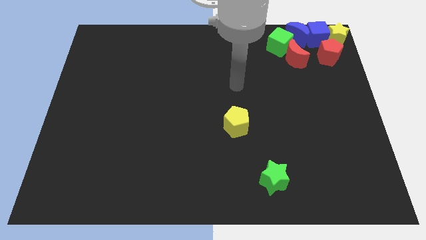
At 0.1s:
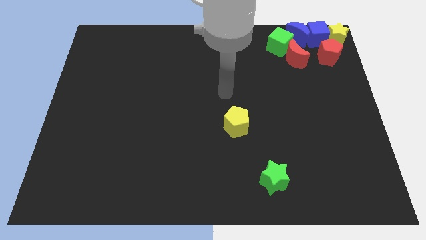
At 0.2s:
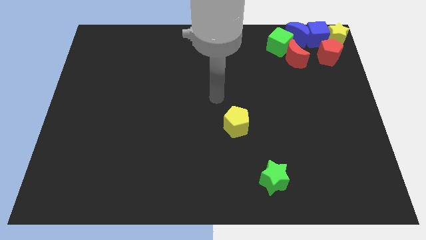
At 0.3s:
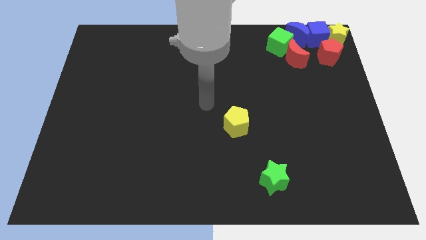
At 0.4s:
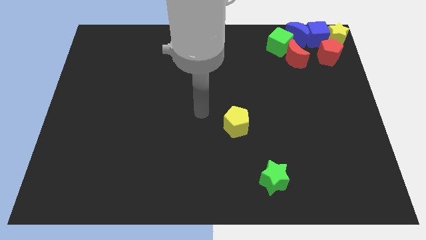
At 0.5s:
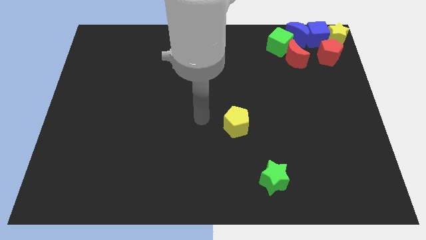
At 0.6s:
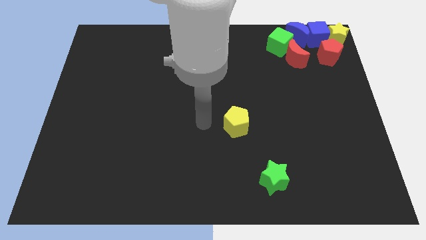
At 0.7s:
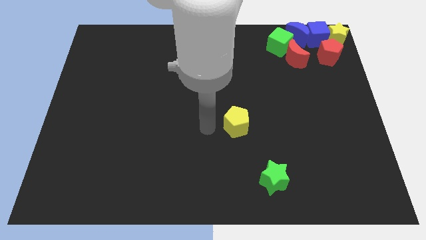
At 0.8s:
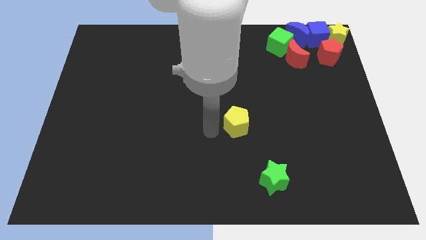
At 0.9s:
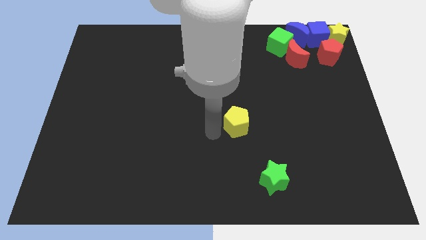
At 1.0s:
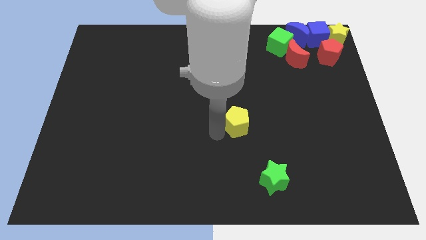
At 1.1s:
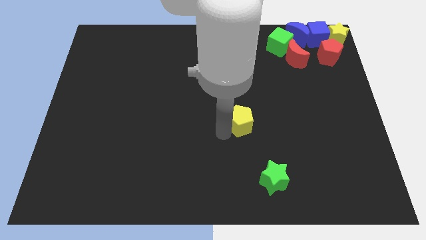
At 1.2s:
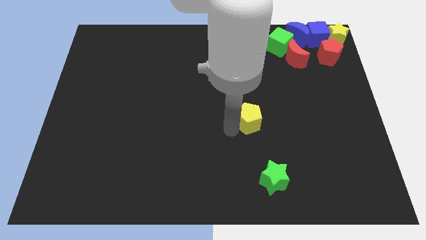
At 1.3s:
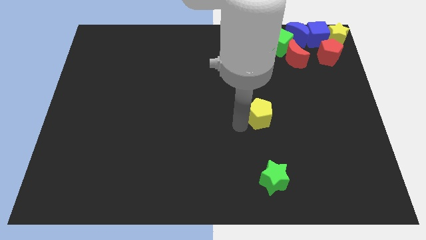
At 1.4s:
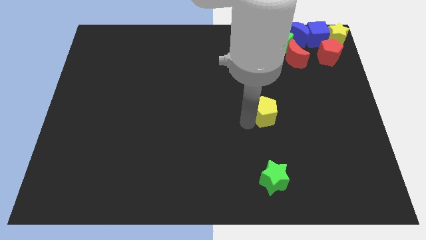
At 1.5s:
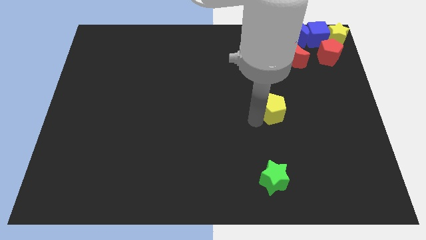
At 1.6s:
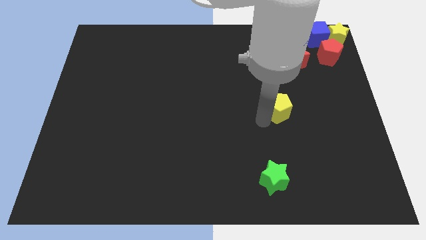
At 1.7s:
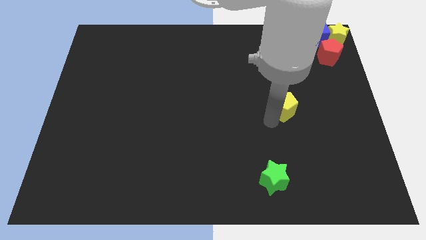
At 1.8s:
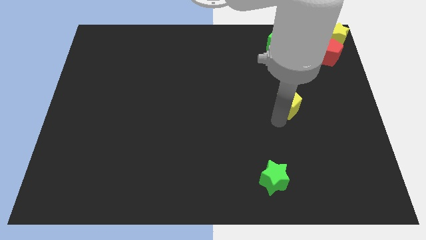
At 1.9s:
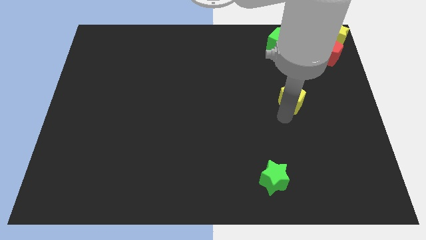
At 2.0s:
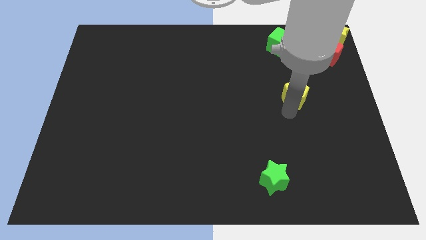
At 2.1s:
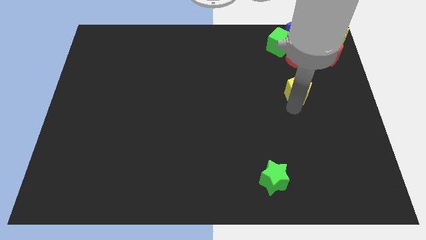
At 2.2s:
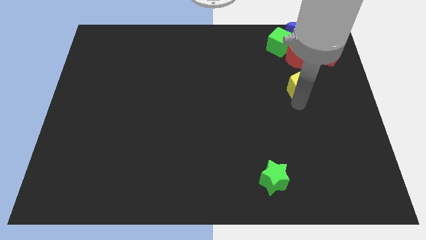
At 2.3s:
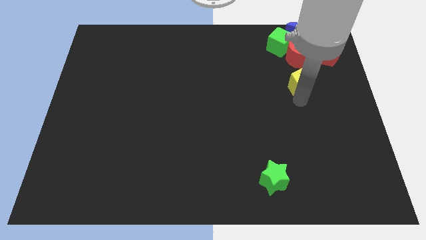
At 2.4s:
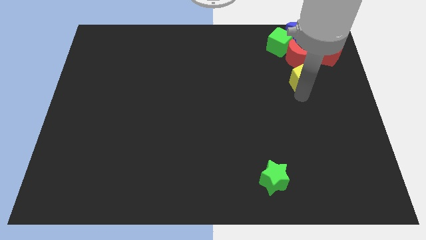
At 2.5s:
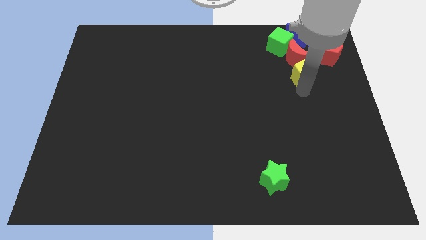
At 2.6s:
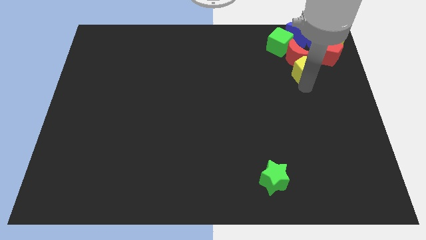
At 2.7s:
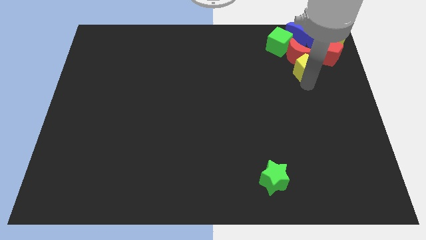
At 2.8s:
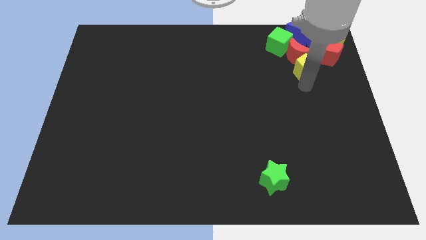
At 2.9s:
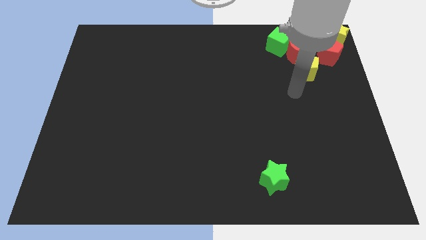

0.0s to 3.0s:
move the yellow pentagon to the bottom side of the red crescent

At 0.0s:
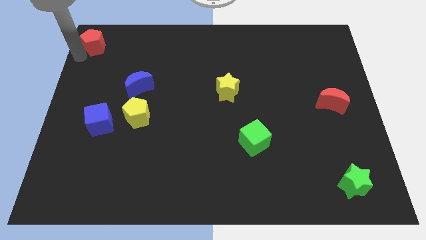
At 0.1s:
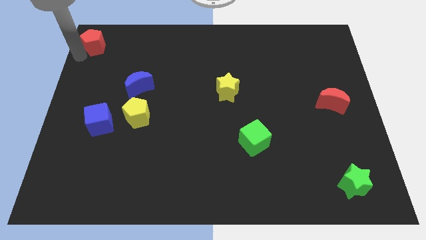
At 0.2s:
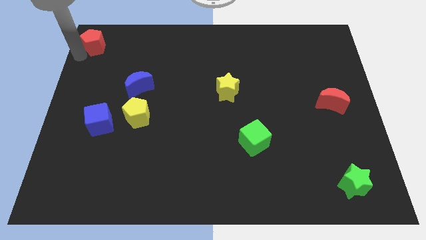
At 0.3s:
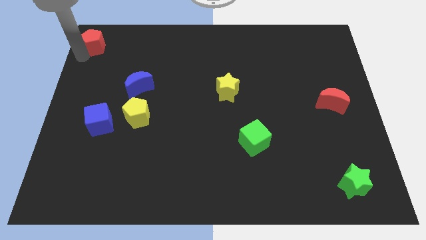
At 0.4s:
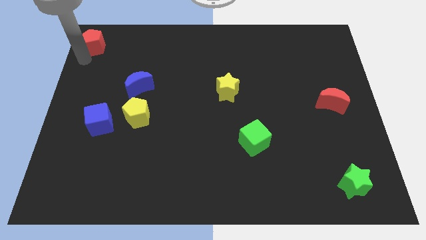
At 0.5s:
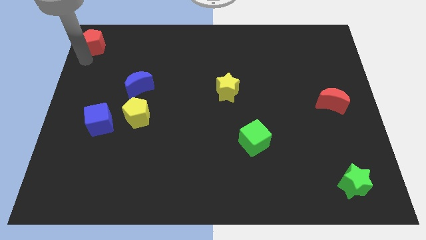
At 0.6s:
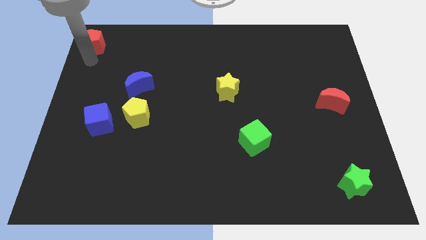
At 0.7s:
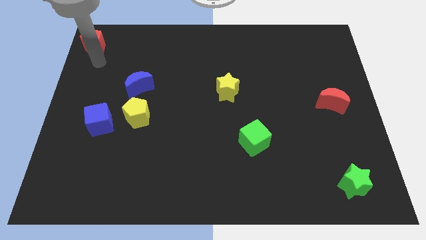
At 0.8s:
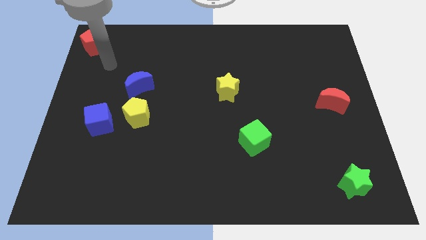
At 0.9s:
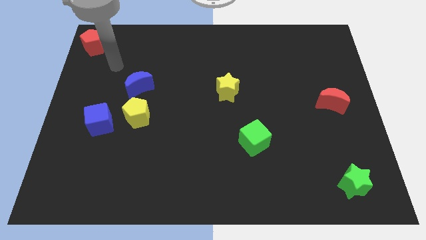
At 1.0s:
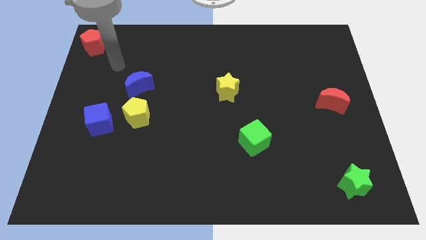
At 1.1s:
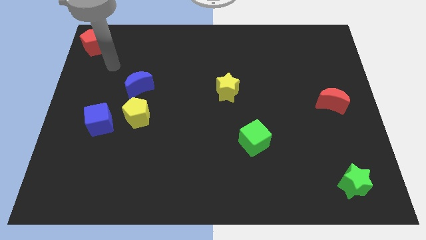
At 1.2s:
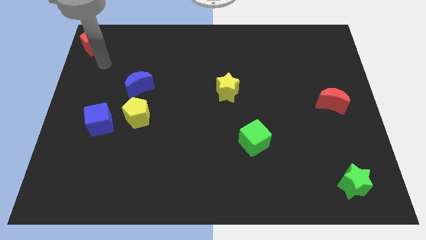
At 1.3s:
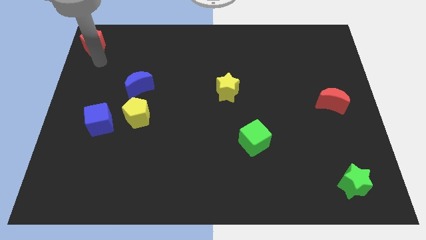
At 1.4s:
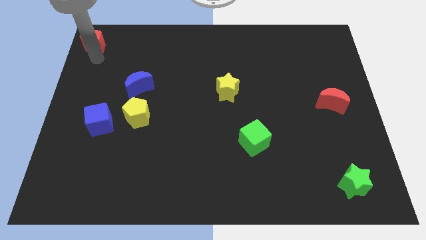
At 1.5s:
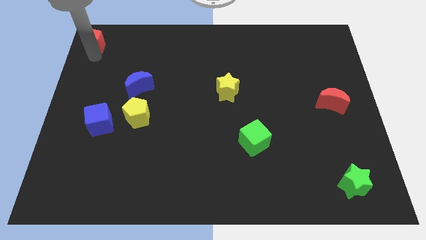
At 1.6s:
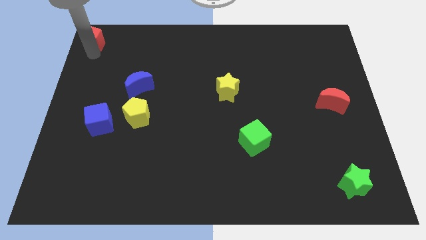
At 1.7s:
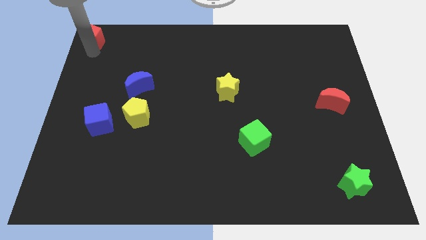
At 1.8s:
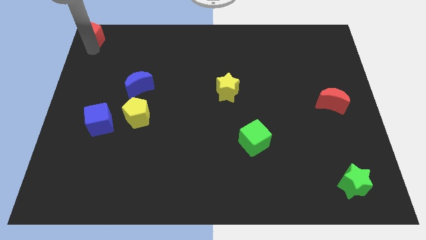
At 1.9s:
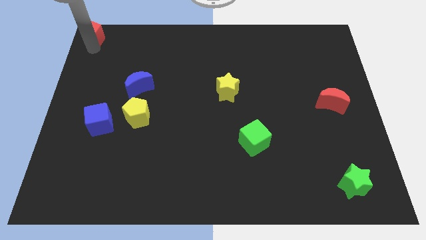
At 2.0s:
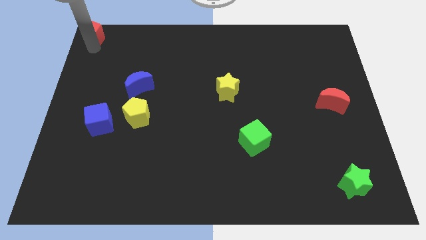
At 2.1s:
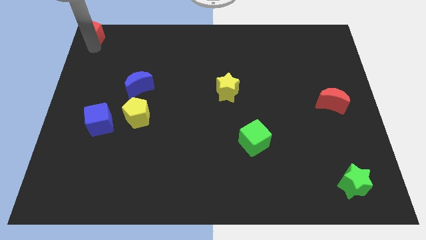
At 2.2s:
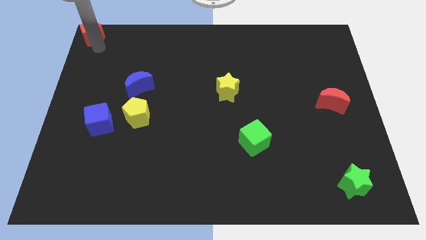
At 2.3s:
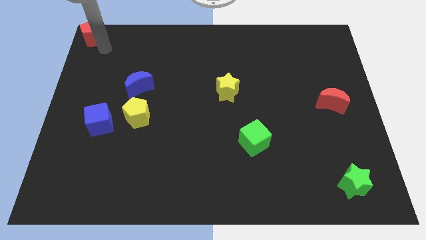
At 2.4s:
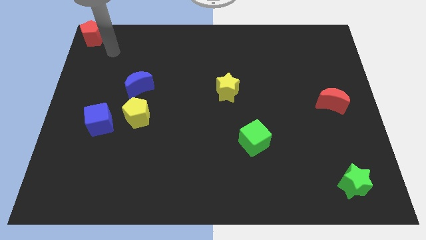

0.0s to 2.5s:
move slightly the red pentagon to the top left

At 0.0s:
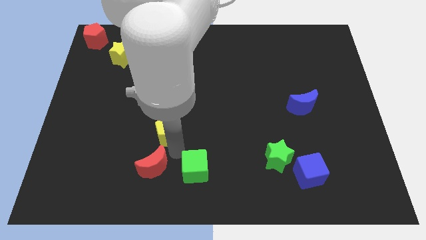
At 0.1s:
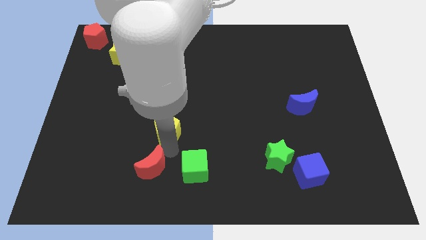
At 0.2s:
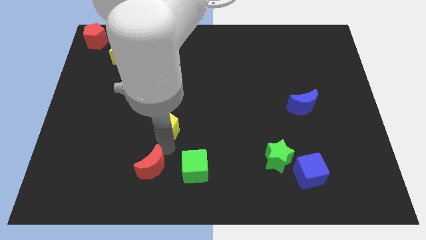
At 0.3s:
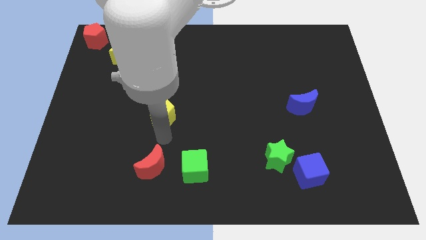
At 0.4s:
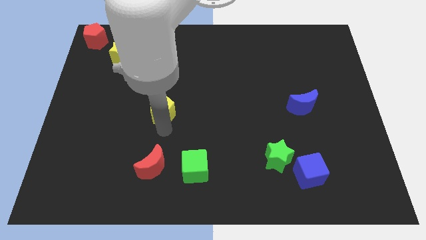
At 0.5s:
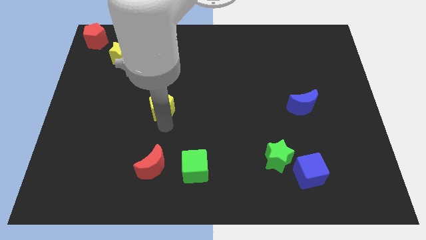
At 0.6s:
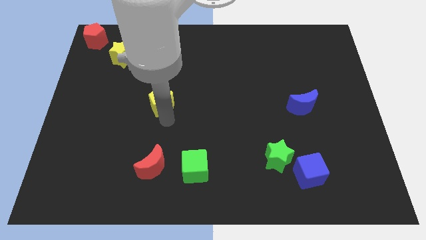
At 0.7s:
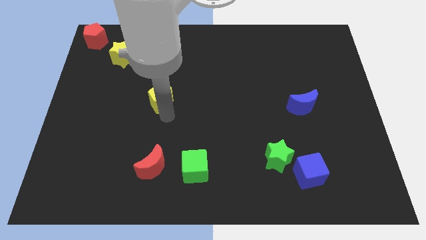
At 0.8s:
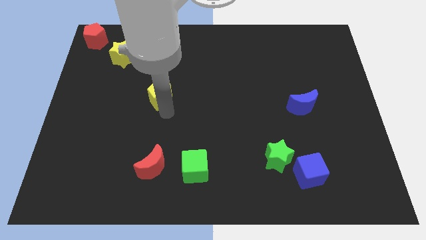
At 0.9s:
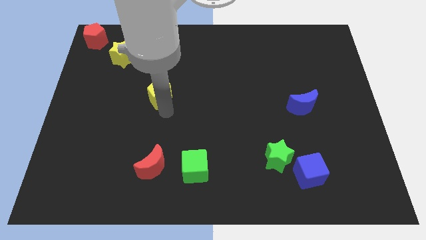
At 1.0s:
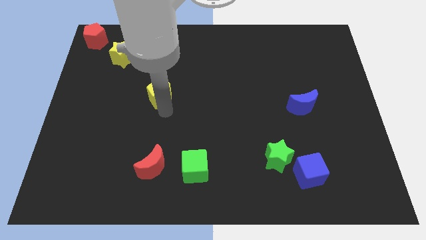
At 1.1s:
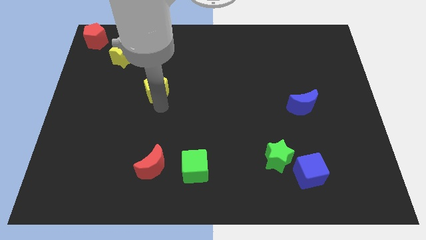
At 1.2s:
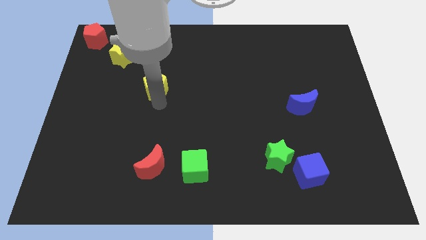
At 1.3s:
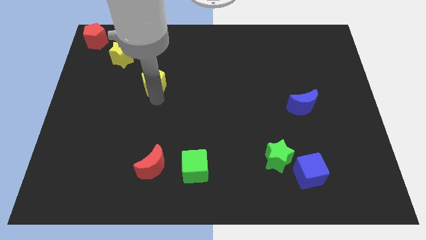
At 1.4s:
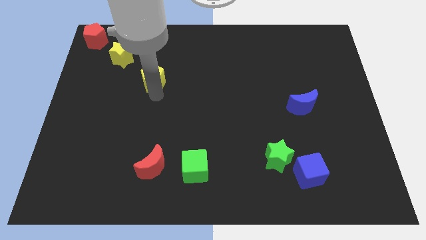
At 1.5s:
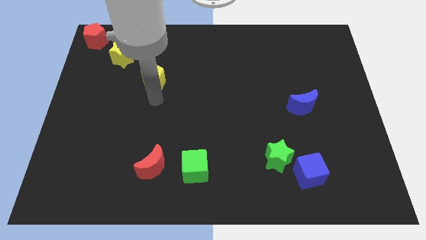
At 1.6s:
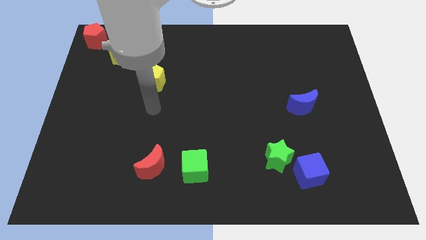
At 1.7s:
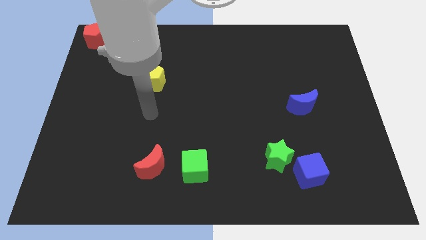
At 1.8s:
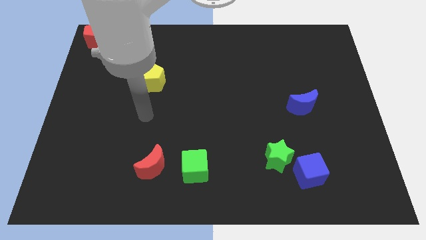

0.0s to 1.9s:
push the yellow pentagon to the bottom right side of the yellow star

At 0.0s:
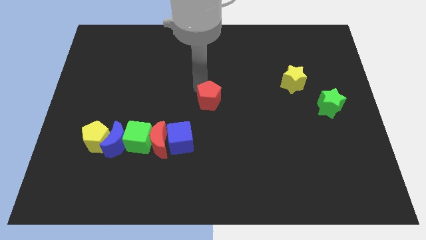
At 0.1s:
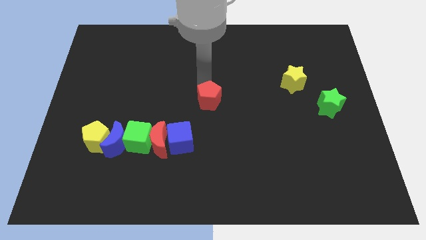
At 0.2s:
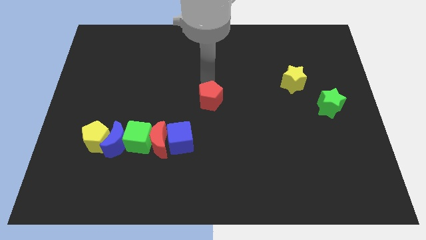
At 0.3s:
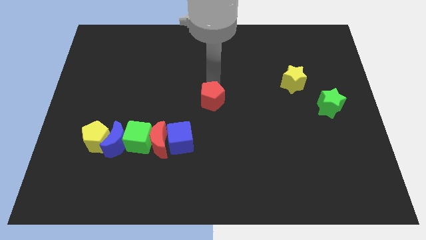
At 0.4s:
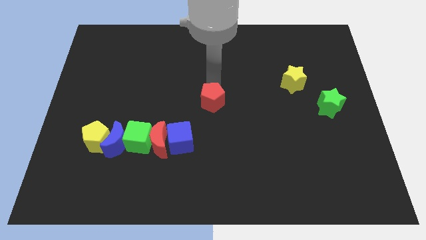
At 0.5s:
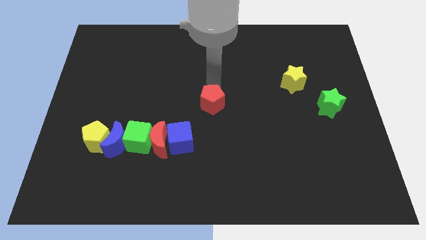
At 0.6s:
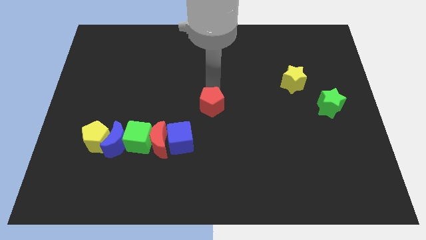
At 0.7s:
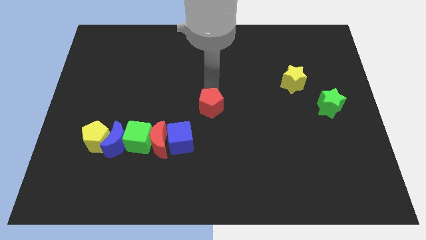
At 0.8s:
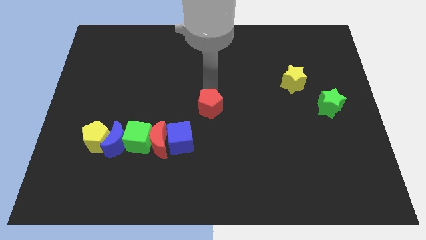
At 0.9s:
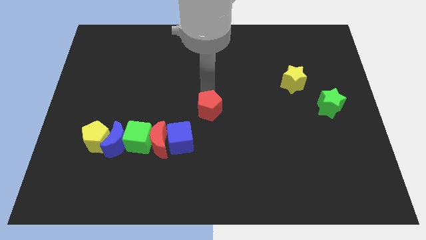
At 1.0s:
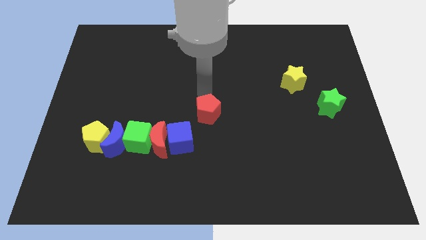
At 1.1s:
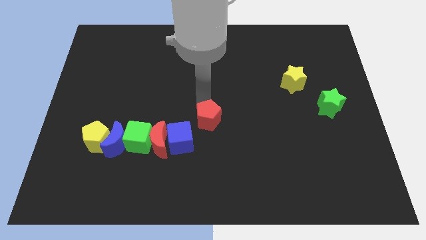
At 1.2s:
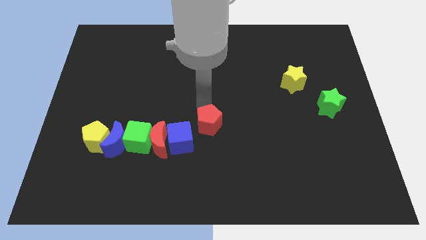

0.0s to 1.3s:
move red pentagon slightly down

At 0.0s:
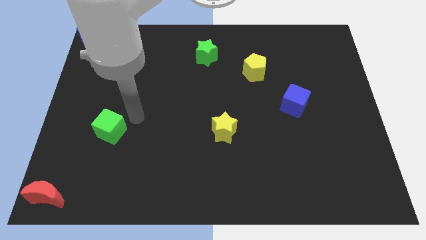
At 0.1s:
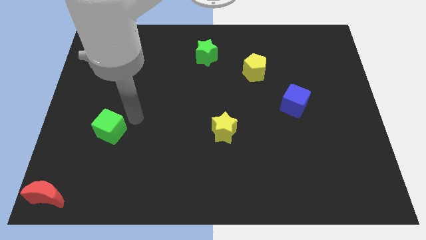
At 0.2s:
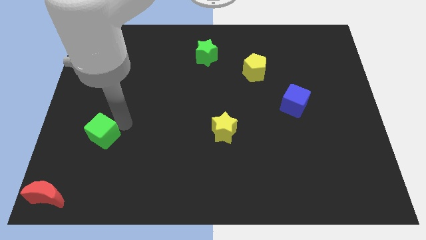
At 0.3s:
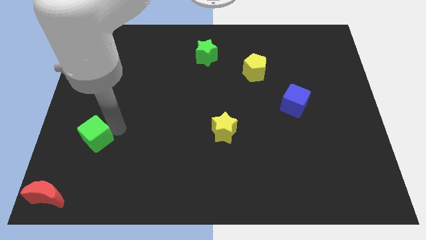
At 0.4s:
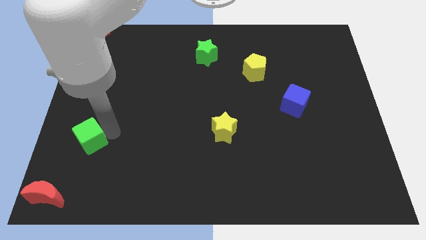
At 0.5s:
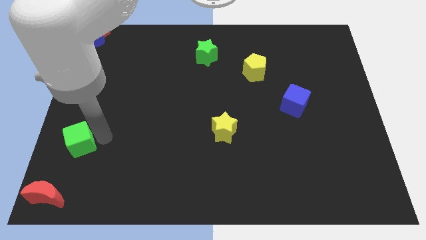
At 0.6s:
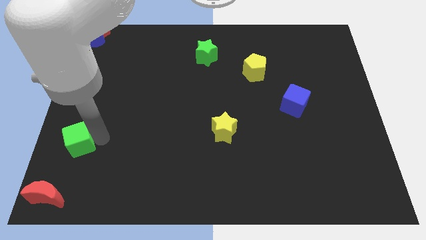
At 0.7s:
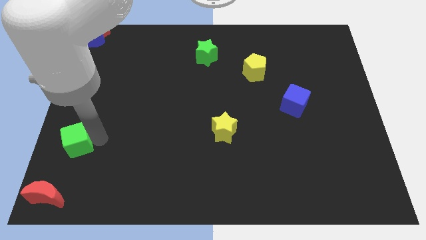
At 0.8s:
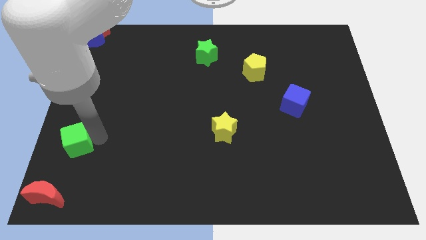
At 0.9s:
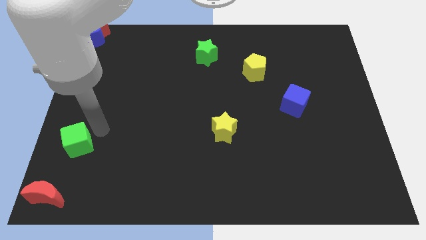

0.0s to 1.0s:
push green cube to the left side of the board
